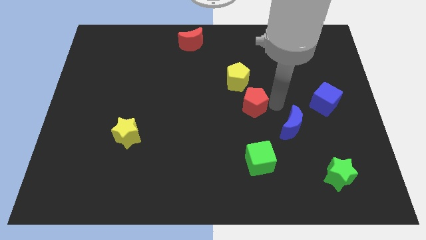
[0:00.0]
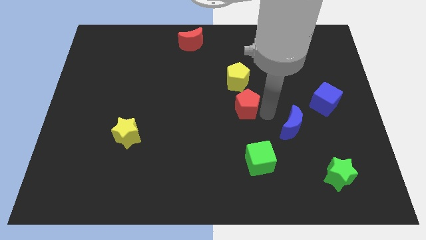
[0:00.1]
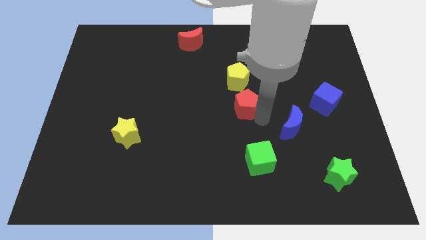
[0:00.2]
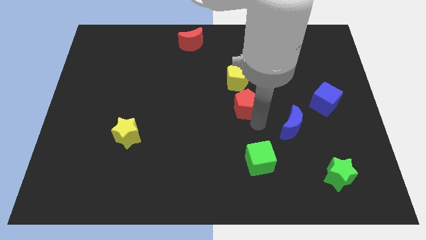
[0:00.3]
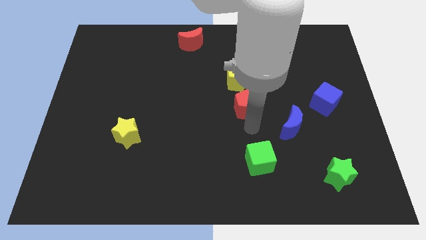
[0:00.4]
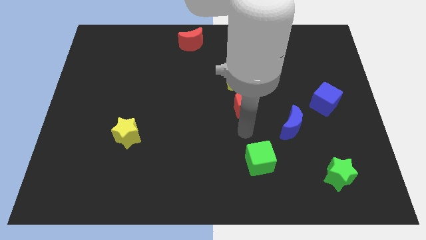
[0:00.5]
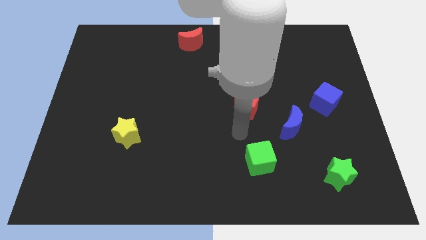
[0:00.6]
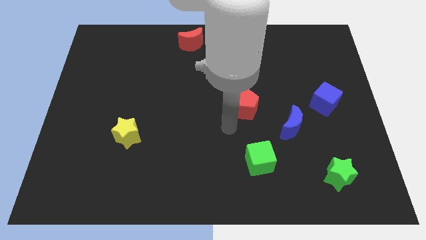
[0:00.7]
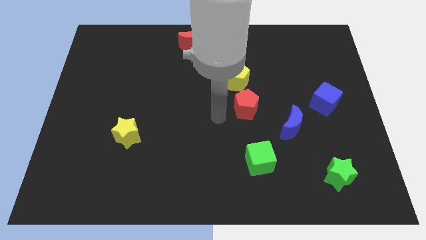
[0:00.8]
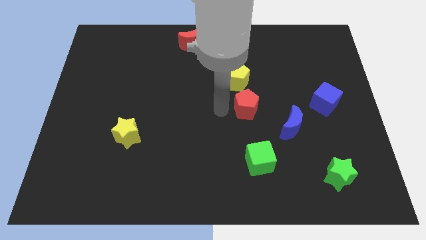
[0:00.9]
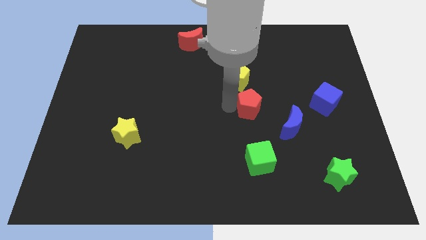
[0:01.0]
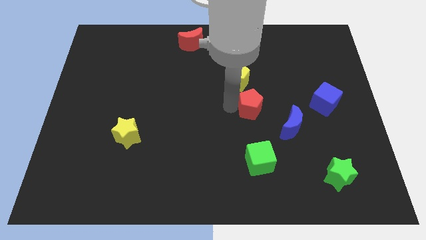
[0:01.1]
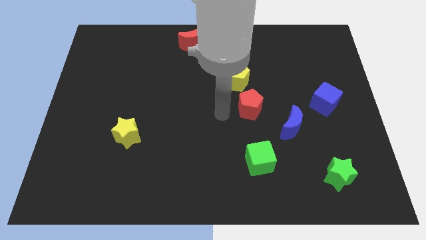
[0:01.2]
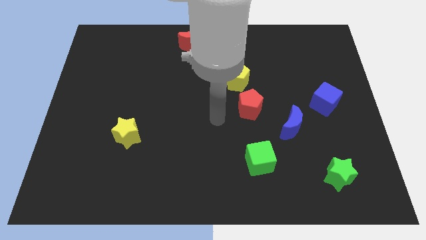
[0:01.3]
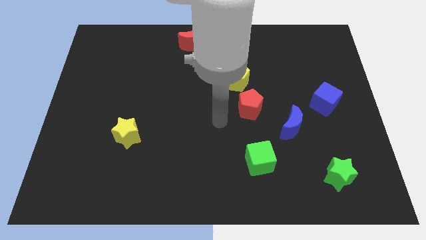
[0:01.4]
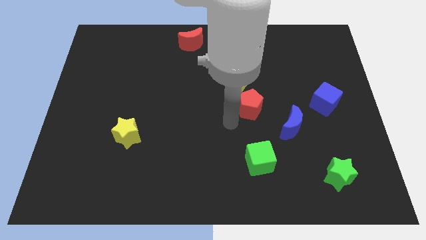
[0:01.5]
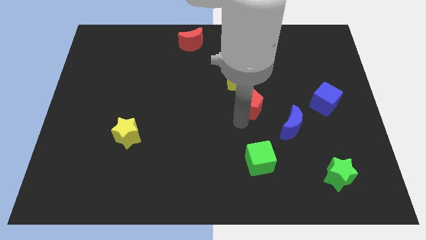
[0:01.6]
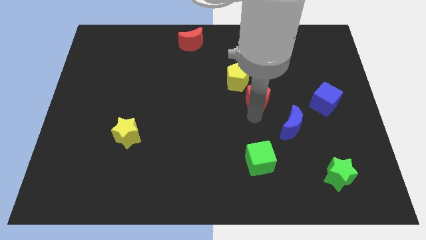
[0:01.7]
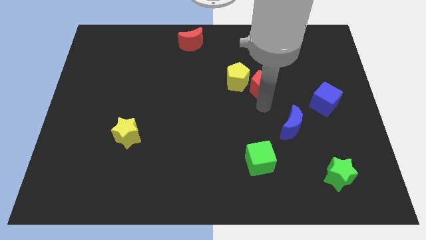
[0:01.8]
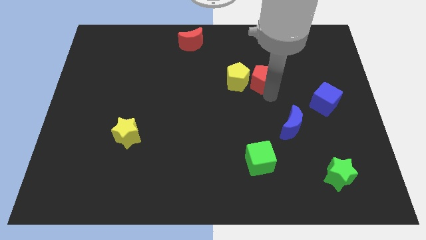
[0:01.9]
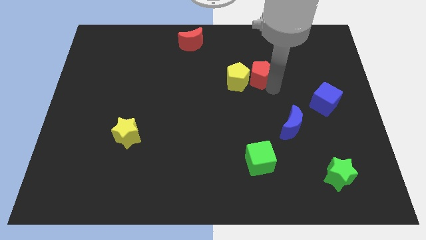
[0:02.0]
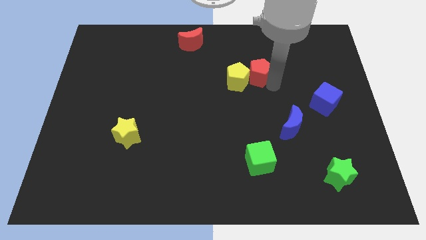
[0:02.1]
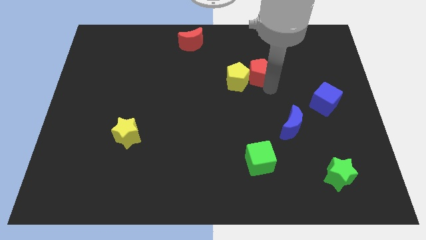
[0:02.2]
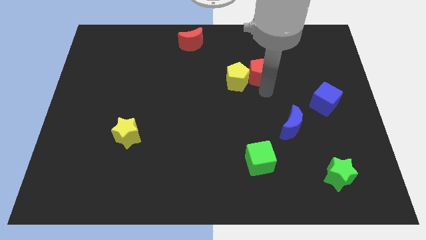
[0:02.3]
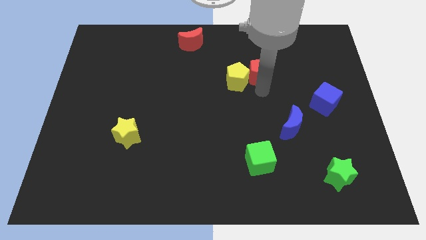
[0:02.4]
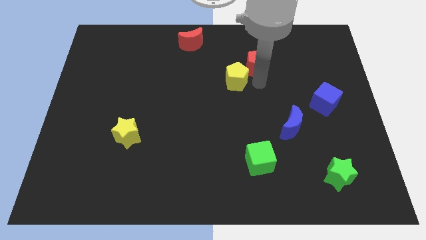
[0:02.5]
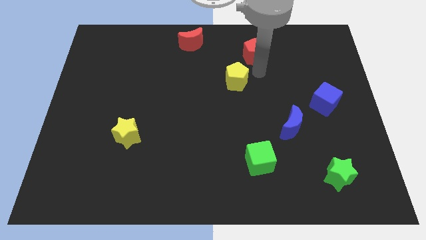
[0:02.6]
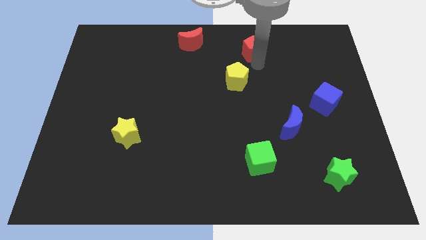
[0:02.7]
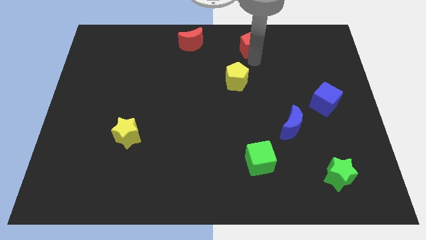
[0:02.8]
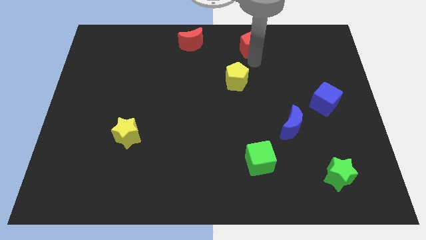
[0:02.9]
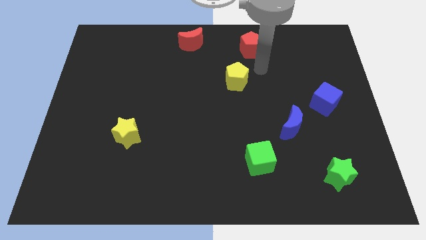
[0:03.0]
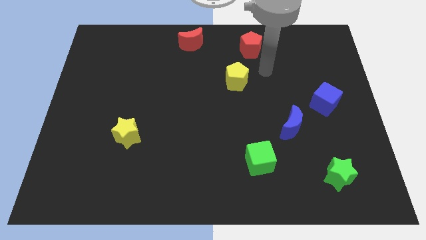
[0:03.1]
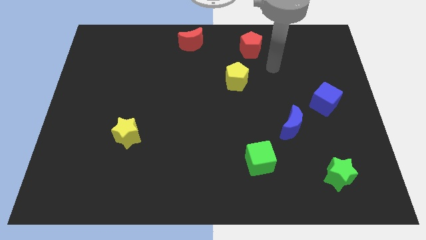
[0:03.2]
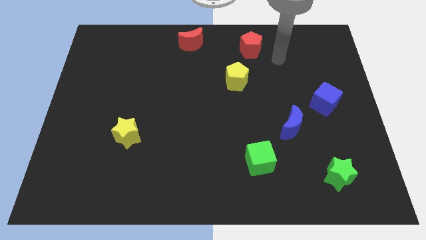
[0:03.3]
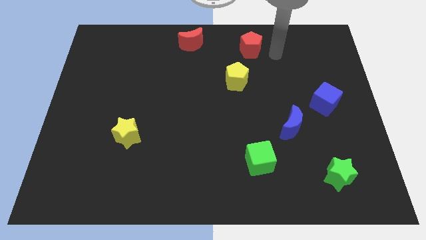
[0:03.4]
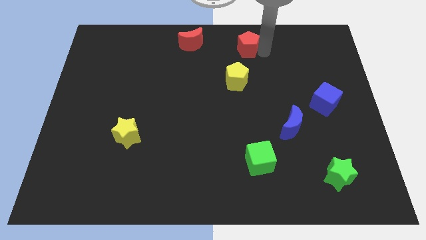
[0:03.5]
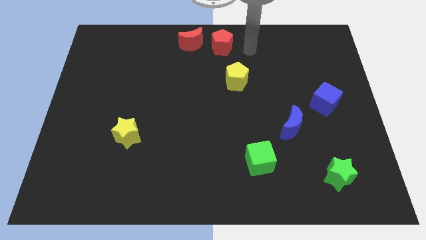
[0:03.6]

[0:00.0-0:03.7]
move the red pentagon to the right side of the red crescent

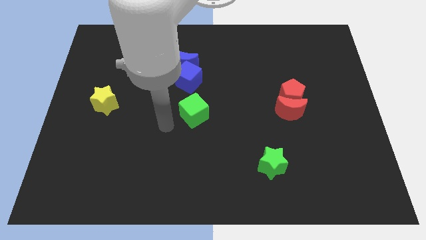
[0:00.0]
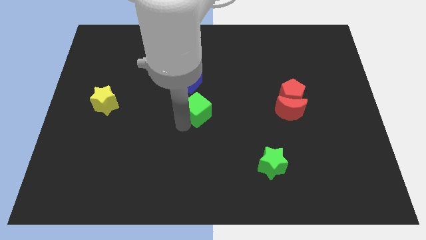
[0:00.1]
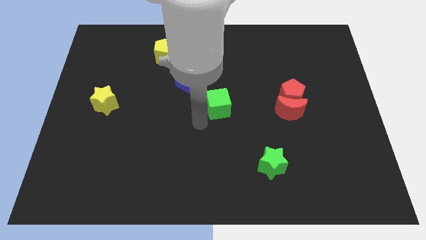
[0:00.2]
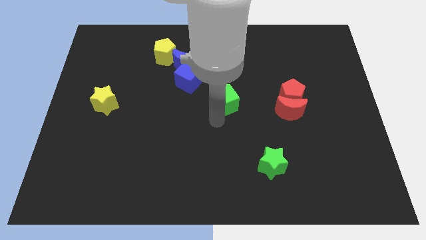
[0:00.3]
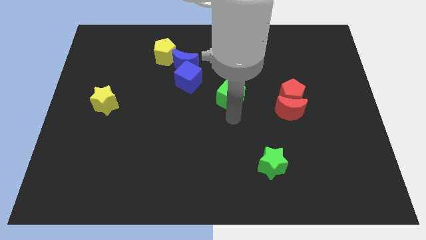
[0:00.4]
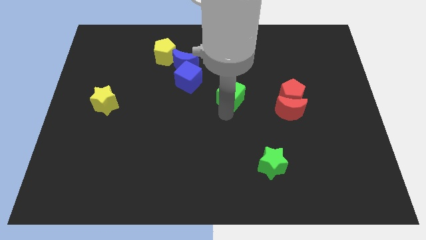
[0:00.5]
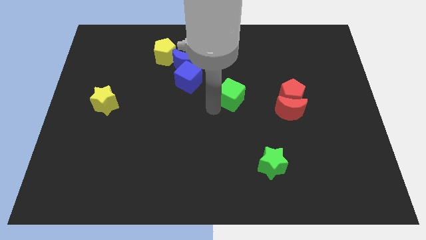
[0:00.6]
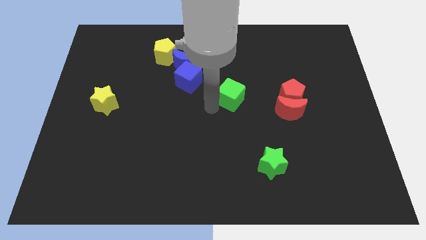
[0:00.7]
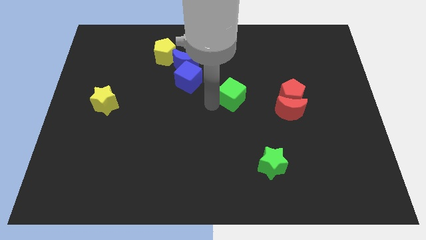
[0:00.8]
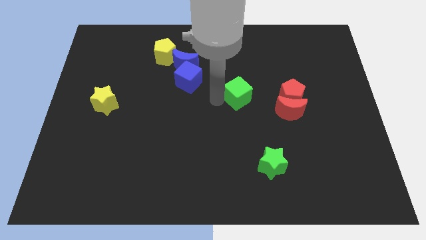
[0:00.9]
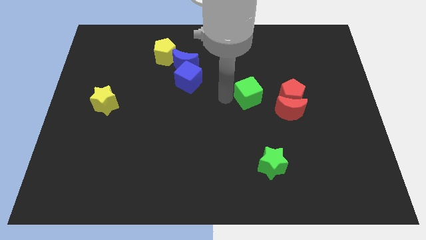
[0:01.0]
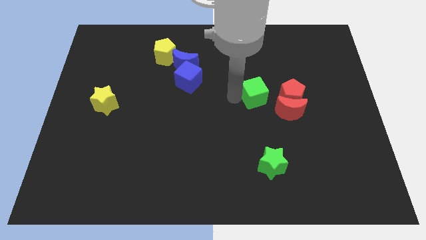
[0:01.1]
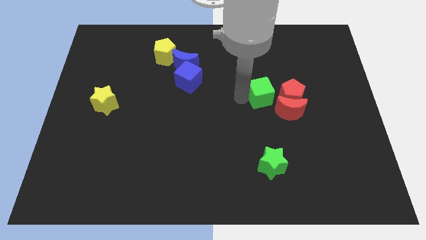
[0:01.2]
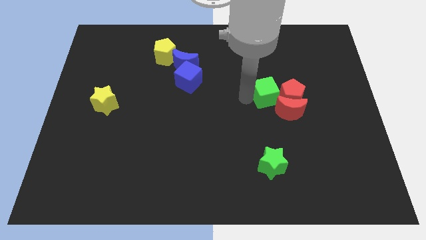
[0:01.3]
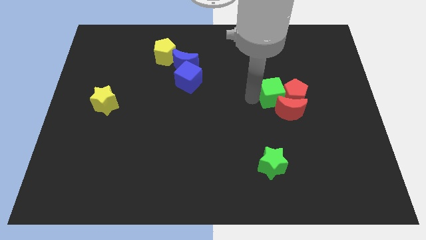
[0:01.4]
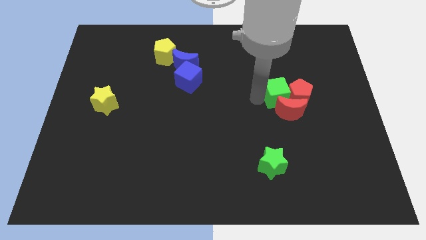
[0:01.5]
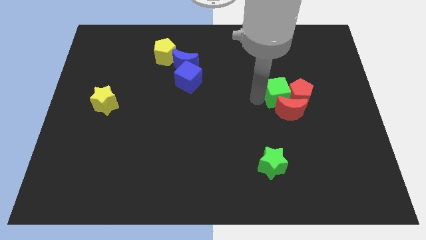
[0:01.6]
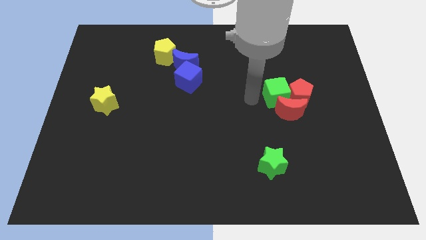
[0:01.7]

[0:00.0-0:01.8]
push the green cube into the red pentagon

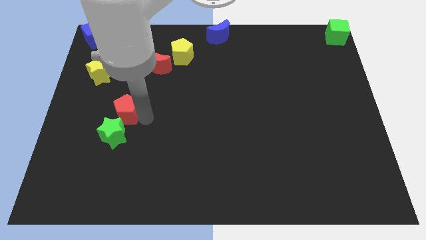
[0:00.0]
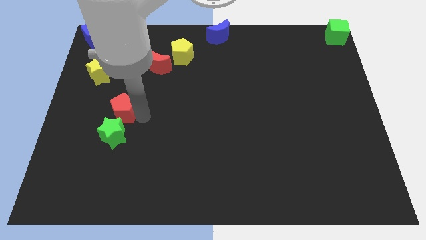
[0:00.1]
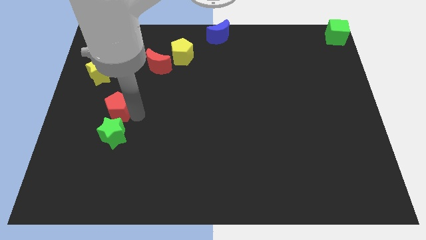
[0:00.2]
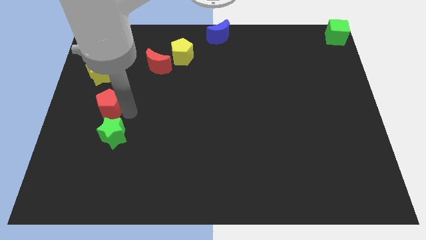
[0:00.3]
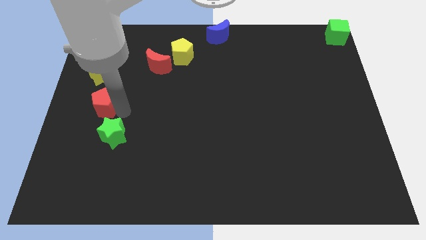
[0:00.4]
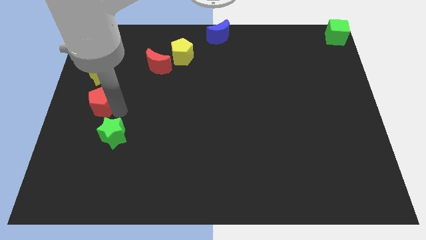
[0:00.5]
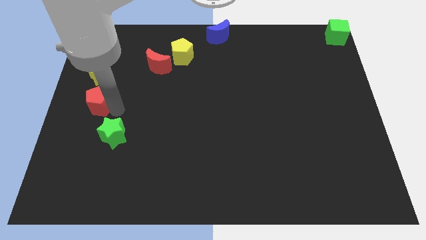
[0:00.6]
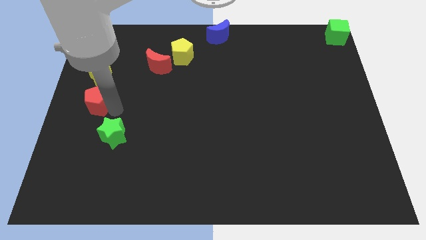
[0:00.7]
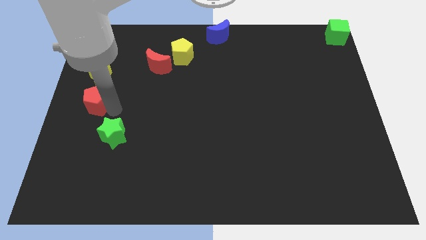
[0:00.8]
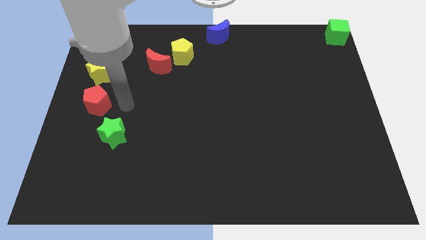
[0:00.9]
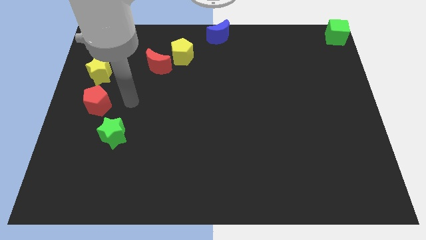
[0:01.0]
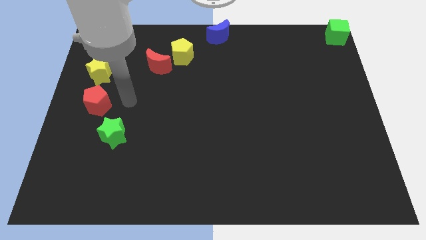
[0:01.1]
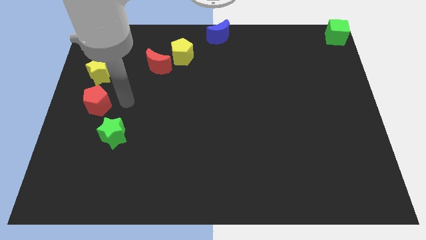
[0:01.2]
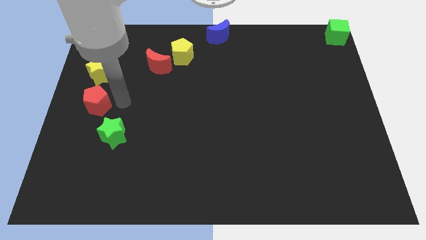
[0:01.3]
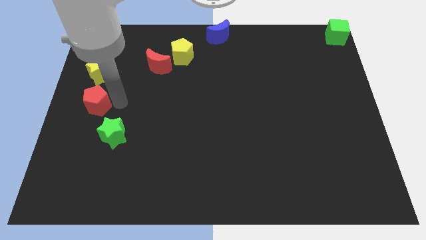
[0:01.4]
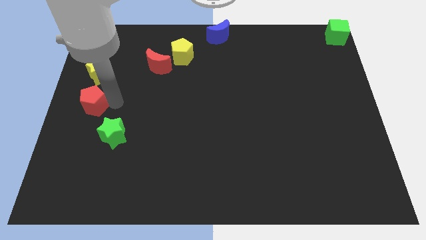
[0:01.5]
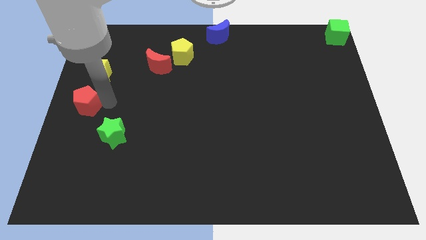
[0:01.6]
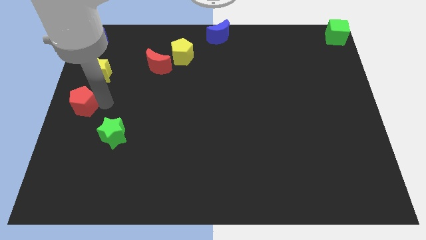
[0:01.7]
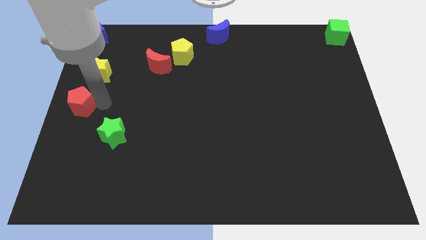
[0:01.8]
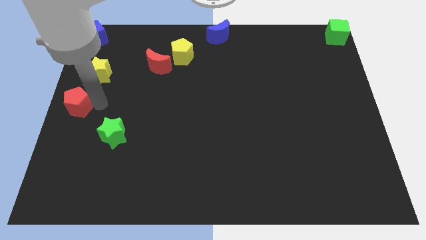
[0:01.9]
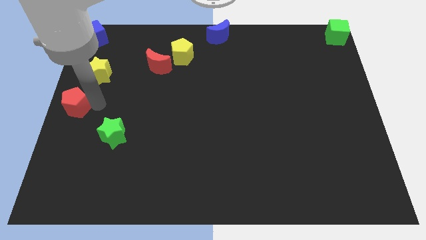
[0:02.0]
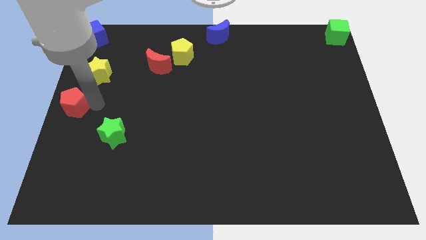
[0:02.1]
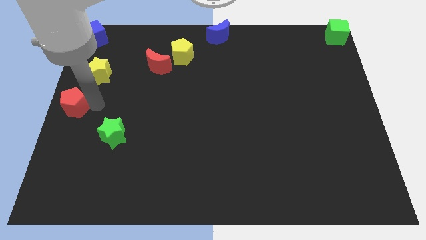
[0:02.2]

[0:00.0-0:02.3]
push the red pentagon to the center left of the board

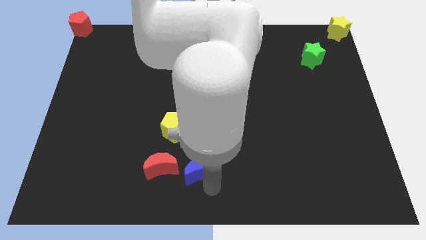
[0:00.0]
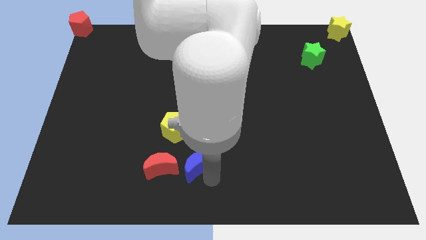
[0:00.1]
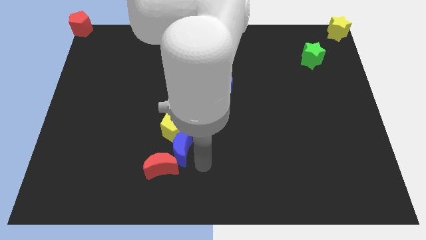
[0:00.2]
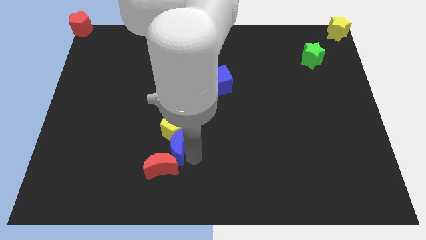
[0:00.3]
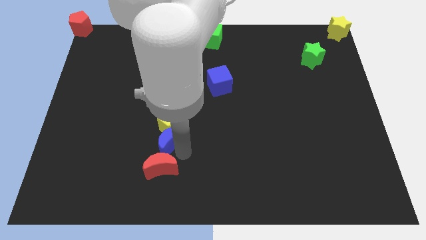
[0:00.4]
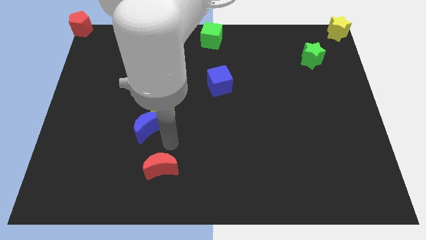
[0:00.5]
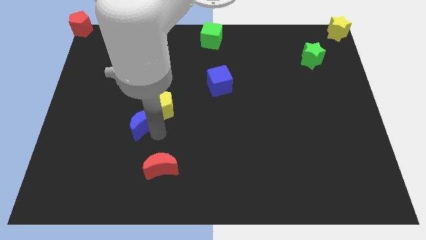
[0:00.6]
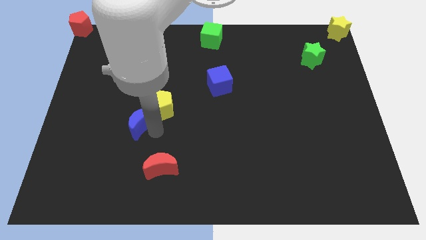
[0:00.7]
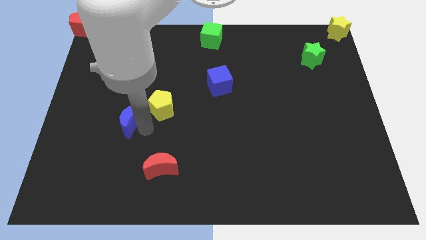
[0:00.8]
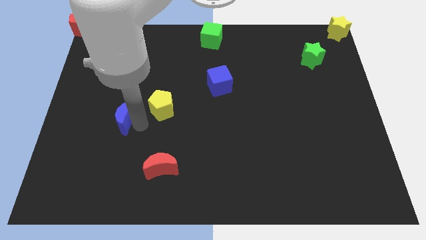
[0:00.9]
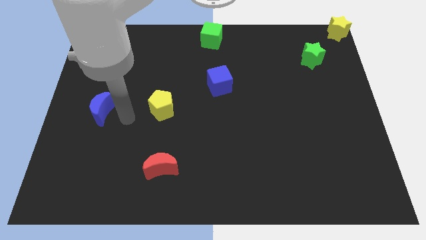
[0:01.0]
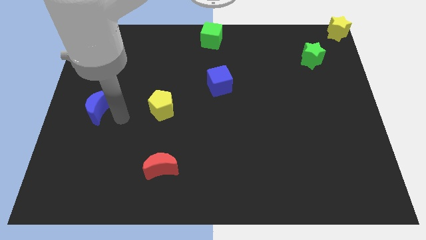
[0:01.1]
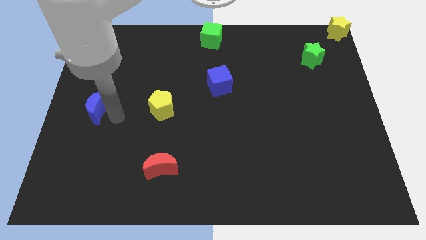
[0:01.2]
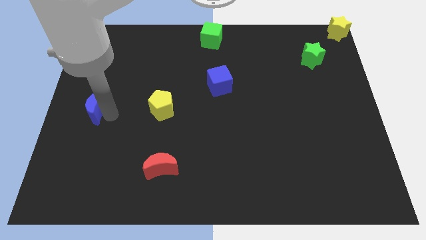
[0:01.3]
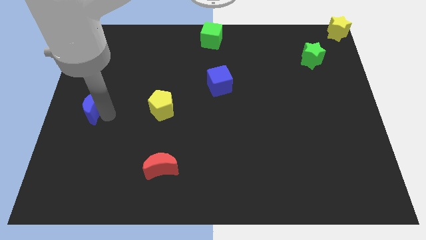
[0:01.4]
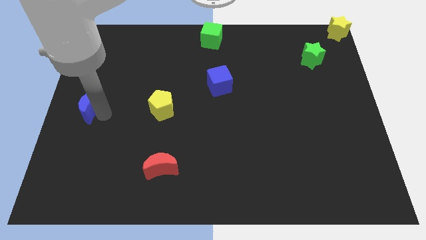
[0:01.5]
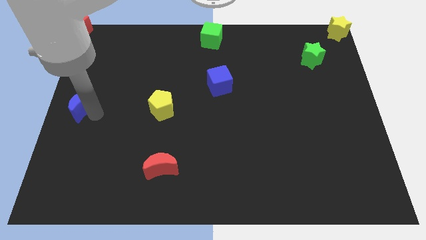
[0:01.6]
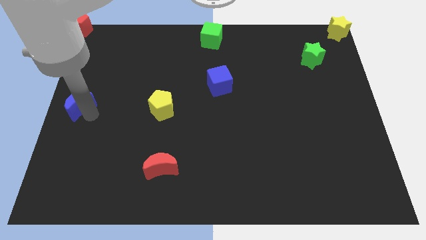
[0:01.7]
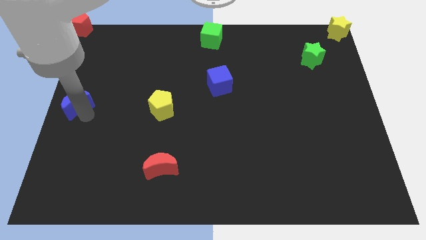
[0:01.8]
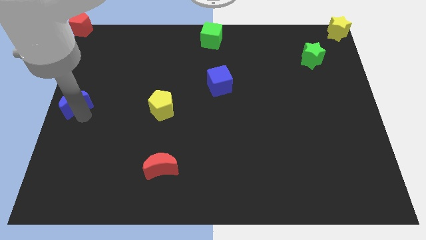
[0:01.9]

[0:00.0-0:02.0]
place the blue moon to the top left
